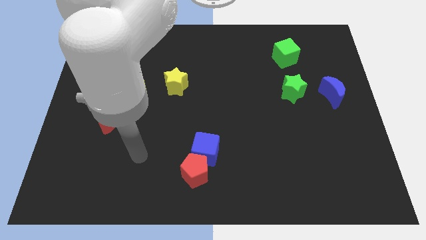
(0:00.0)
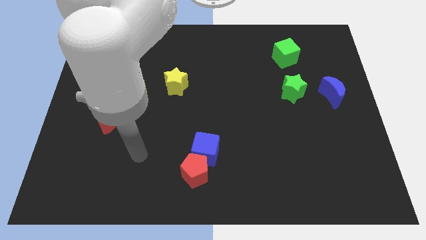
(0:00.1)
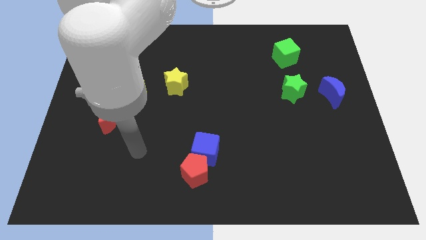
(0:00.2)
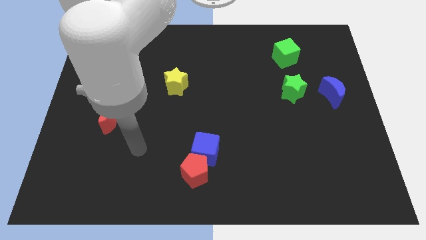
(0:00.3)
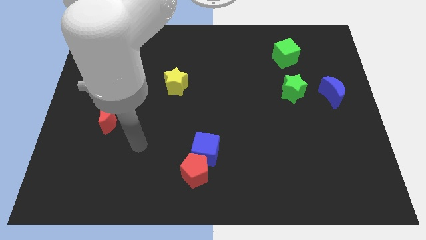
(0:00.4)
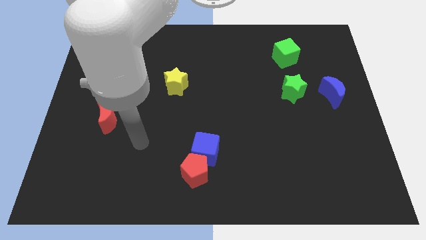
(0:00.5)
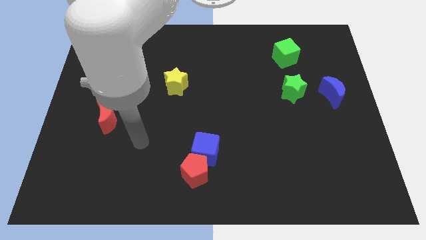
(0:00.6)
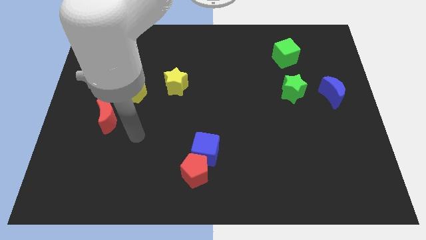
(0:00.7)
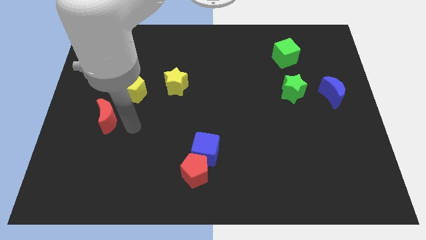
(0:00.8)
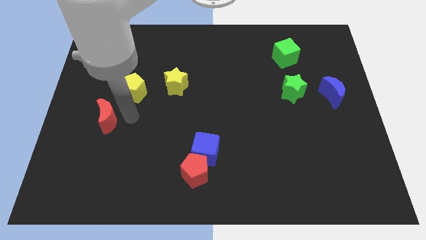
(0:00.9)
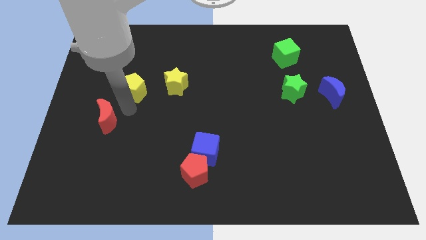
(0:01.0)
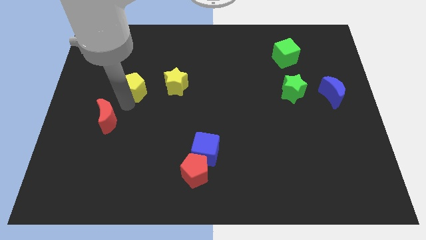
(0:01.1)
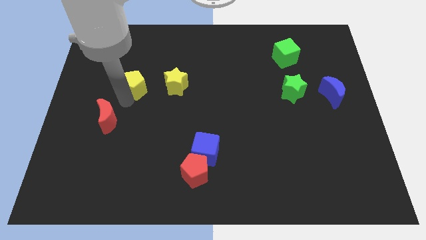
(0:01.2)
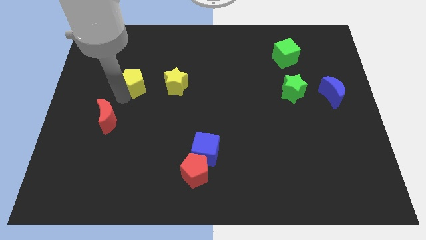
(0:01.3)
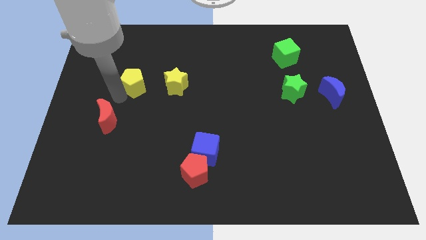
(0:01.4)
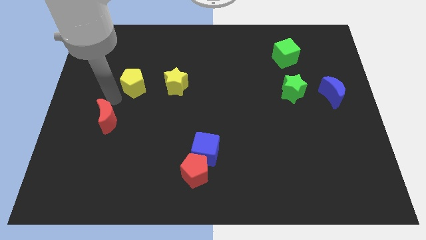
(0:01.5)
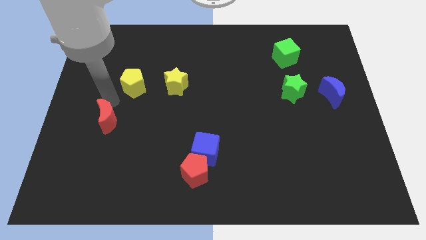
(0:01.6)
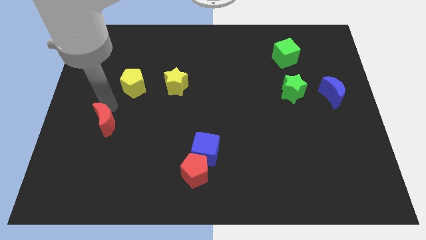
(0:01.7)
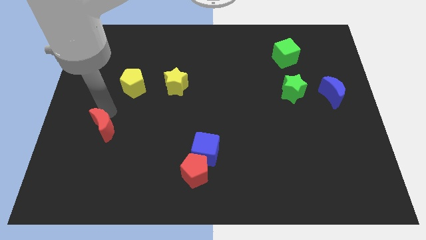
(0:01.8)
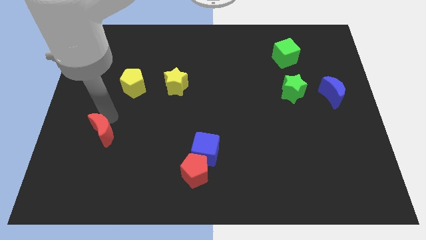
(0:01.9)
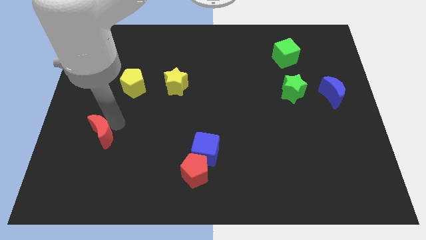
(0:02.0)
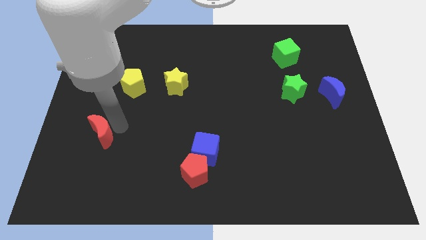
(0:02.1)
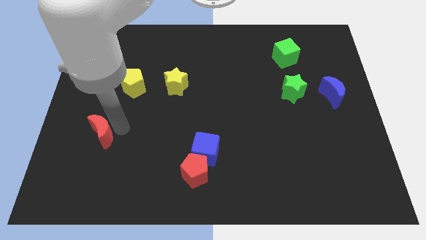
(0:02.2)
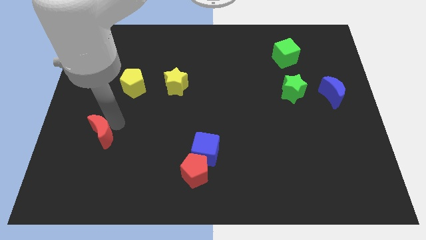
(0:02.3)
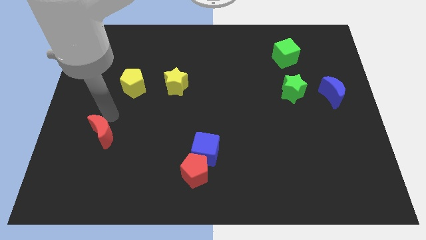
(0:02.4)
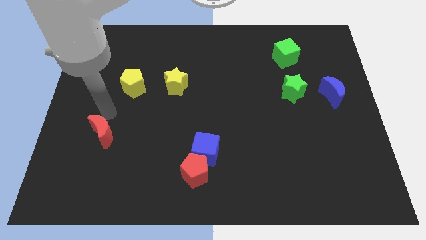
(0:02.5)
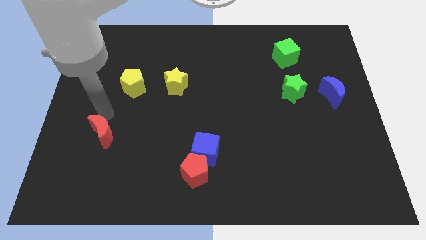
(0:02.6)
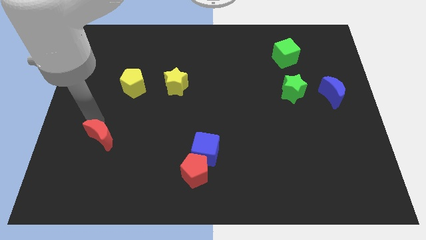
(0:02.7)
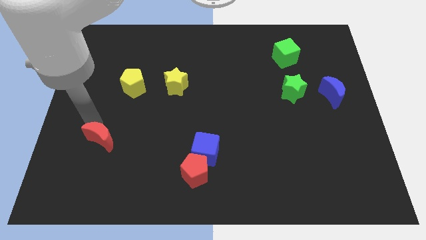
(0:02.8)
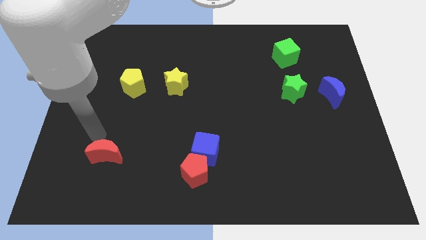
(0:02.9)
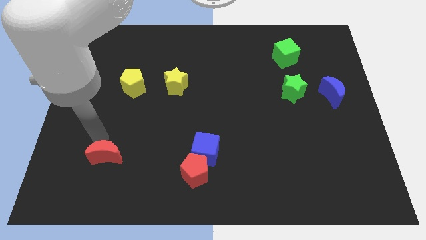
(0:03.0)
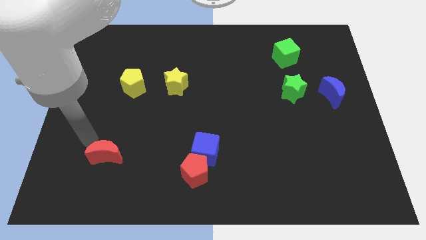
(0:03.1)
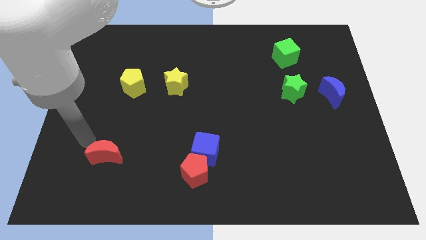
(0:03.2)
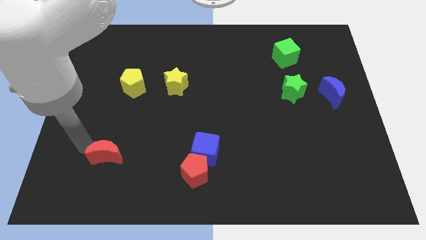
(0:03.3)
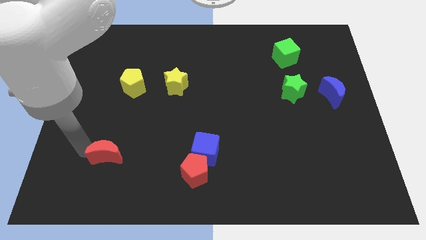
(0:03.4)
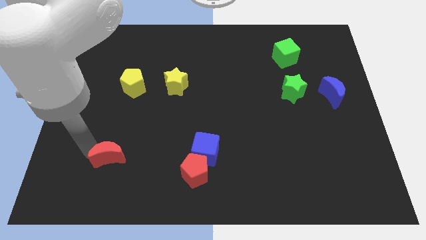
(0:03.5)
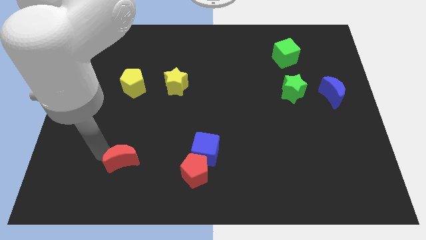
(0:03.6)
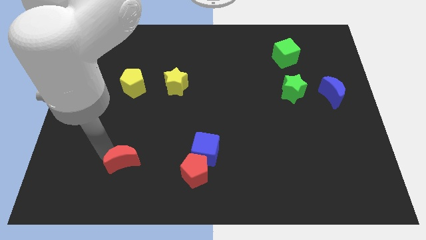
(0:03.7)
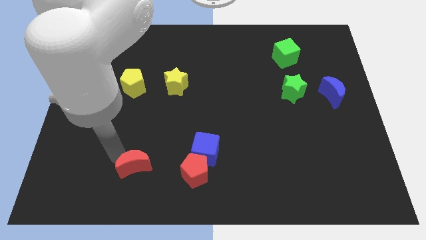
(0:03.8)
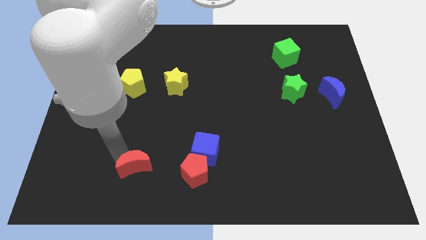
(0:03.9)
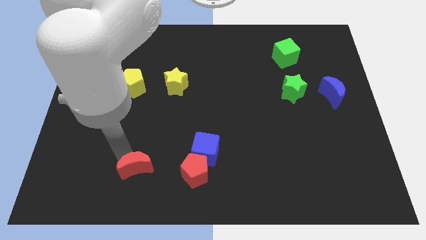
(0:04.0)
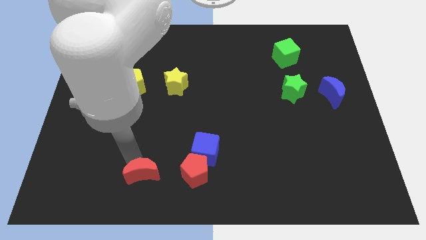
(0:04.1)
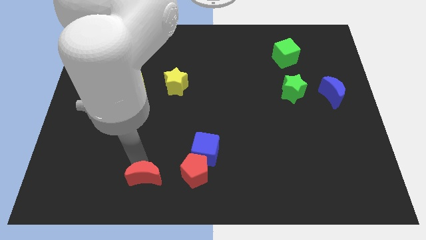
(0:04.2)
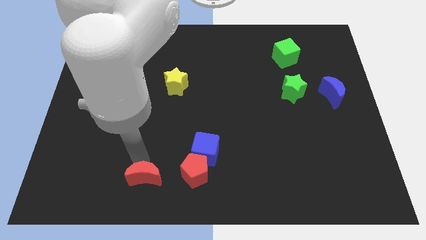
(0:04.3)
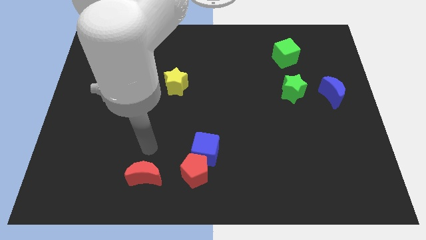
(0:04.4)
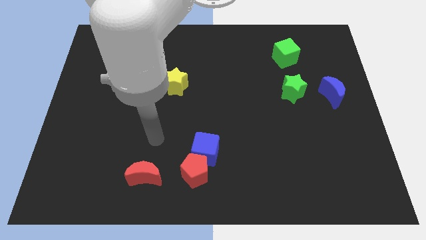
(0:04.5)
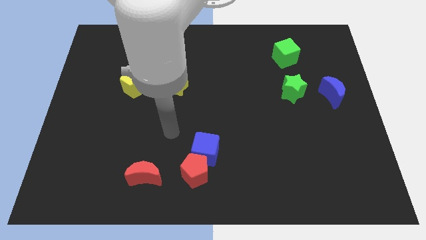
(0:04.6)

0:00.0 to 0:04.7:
move the red crescent down and to the right

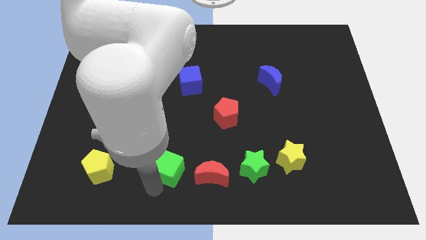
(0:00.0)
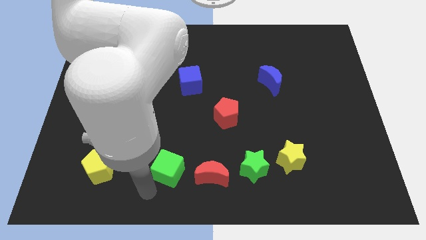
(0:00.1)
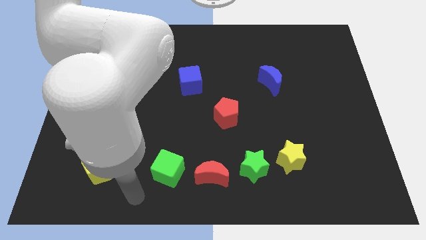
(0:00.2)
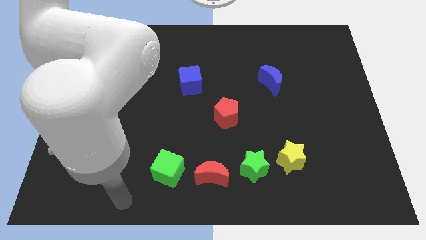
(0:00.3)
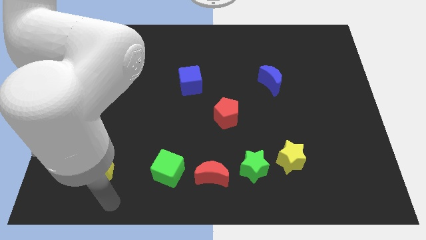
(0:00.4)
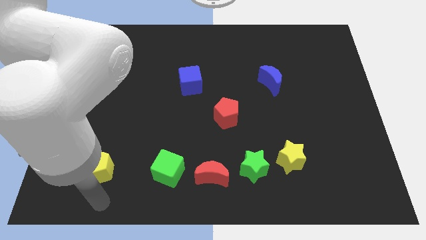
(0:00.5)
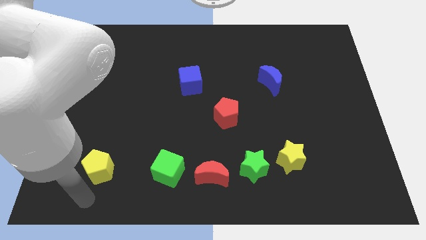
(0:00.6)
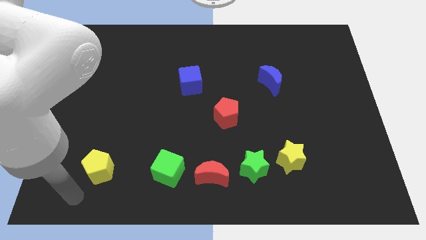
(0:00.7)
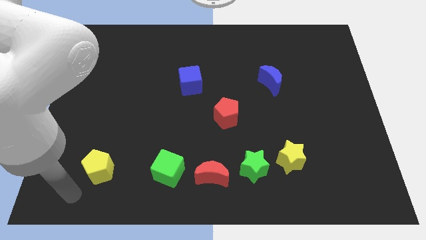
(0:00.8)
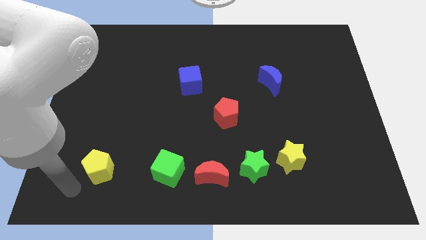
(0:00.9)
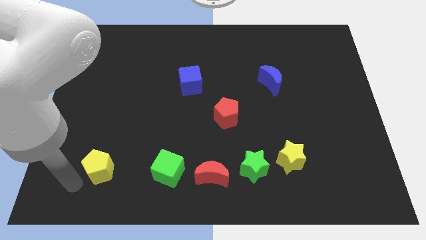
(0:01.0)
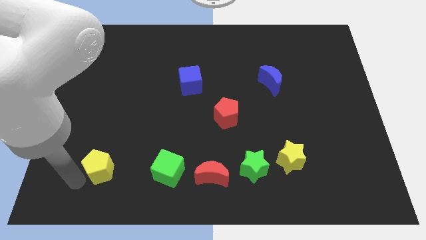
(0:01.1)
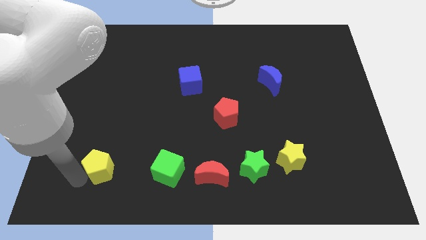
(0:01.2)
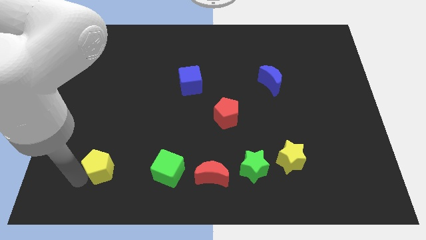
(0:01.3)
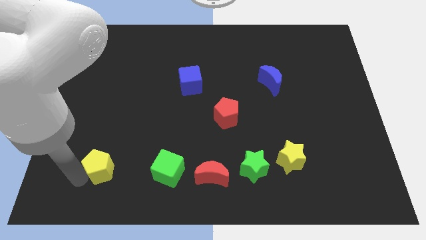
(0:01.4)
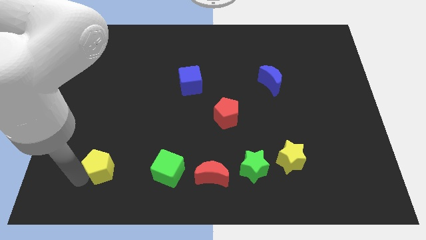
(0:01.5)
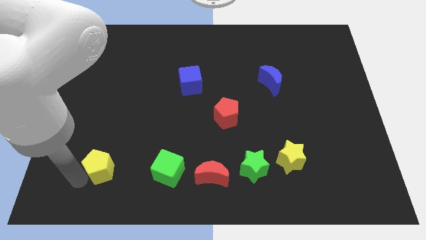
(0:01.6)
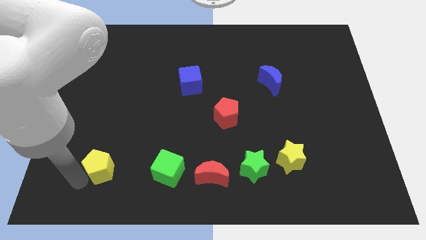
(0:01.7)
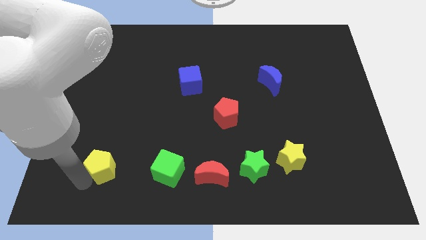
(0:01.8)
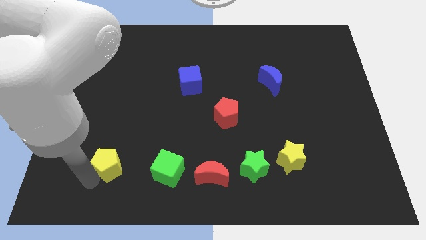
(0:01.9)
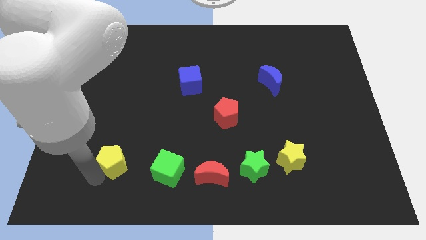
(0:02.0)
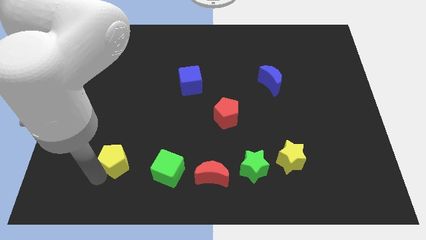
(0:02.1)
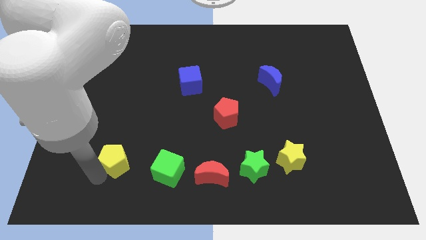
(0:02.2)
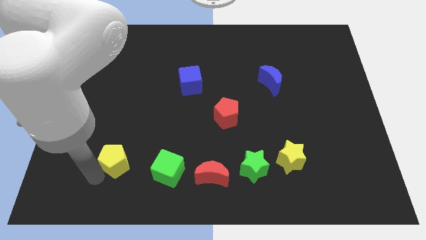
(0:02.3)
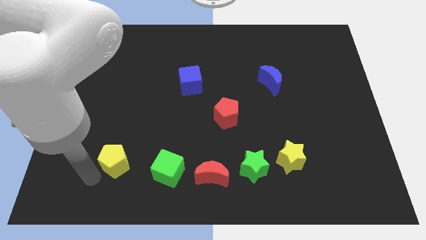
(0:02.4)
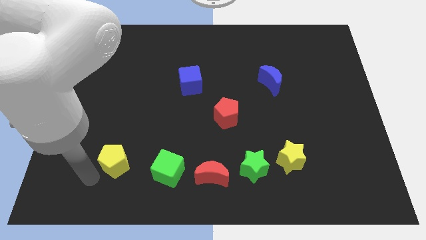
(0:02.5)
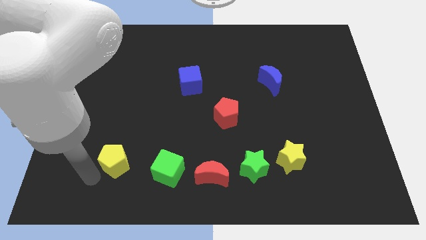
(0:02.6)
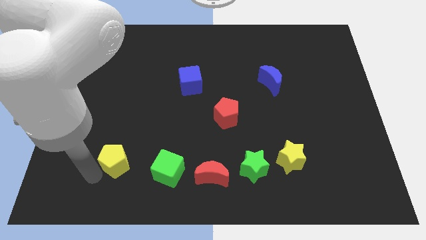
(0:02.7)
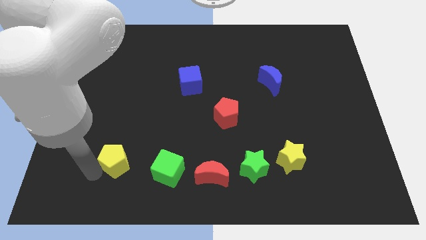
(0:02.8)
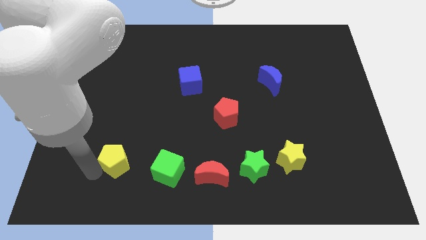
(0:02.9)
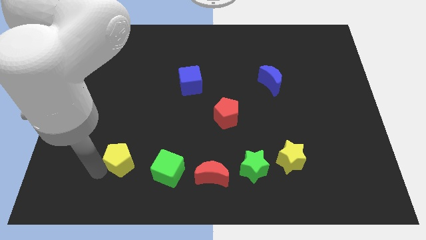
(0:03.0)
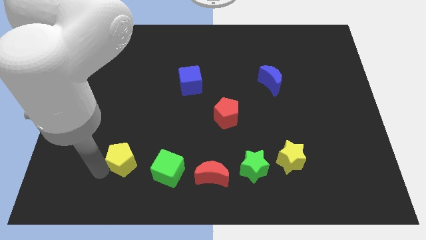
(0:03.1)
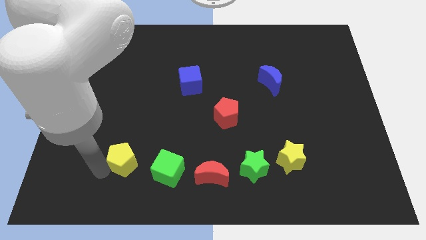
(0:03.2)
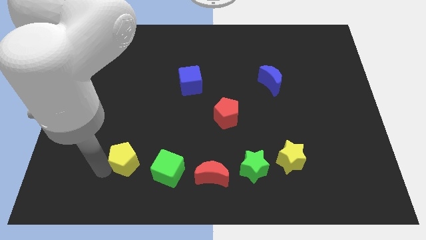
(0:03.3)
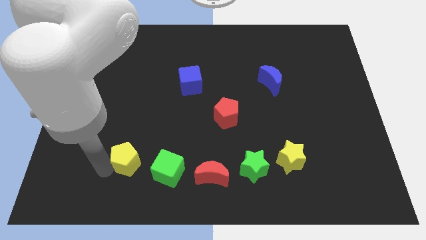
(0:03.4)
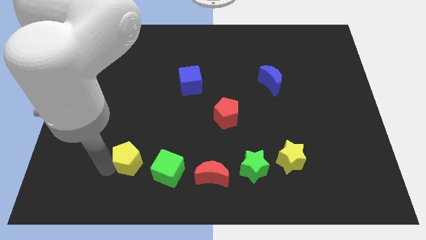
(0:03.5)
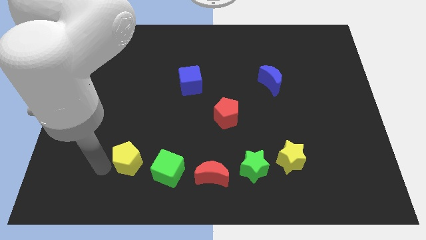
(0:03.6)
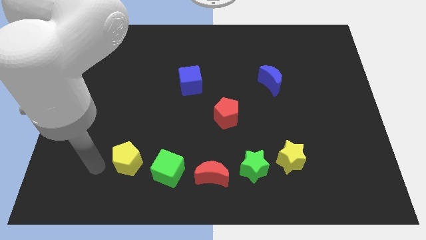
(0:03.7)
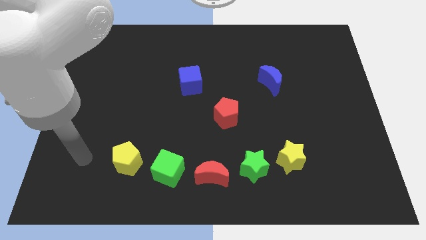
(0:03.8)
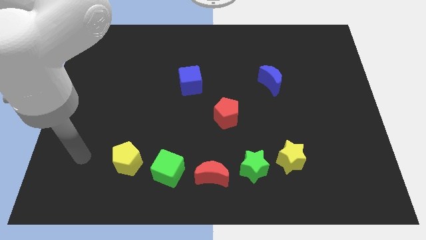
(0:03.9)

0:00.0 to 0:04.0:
push the yellow pentagon to the left of green cube

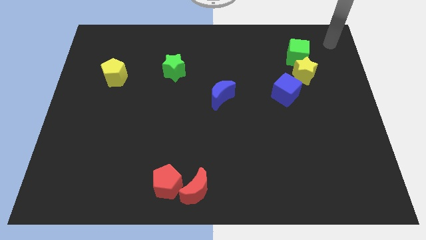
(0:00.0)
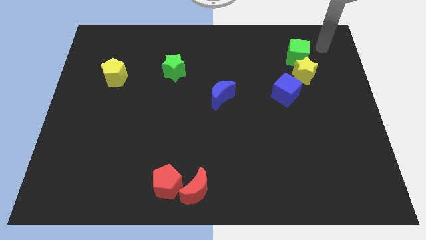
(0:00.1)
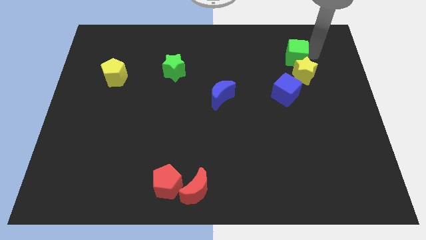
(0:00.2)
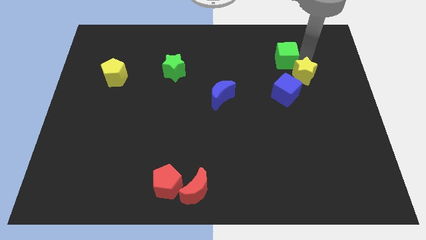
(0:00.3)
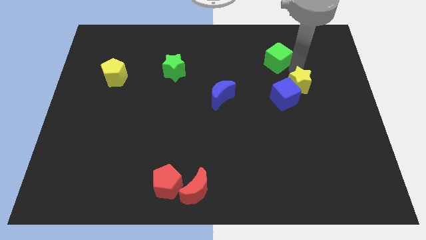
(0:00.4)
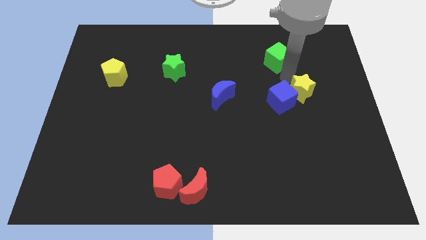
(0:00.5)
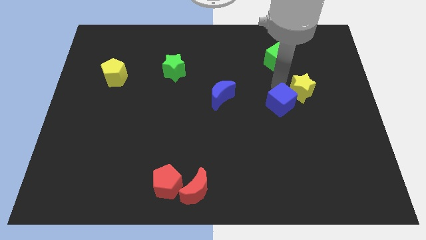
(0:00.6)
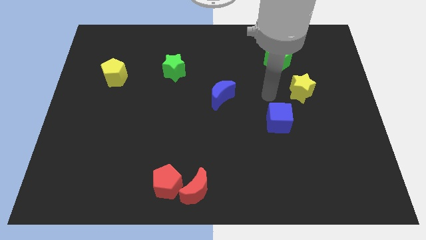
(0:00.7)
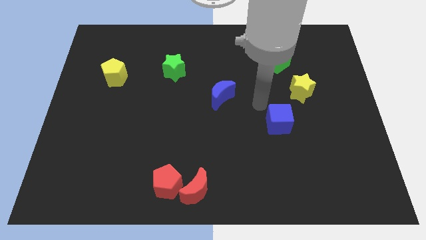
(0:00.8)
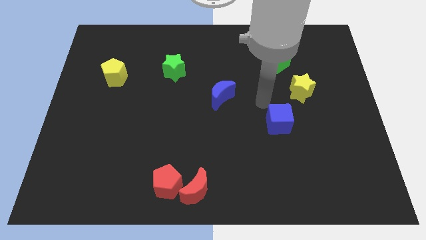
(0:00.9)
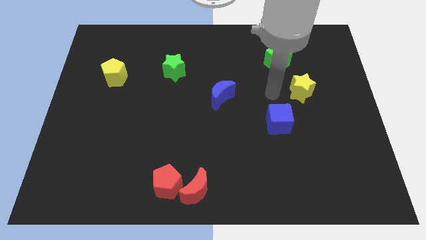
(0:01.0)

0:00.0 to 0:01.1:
move away the group of objects towards the center of the board
